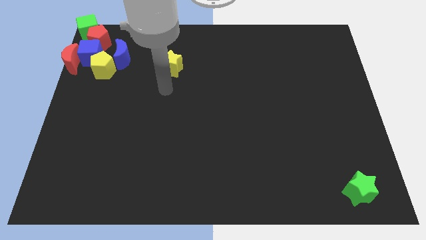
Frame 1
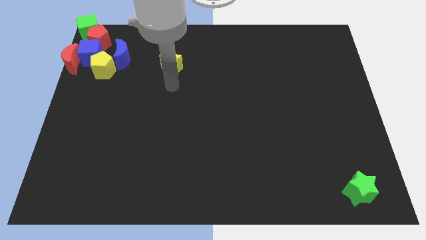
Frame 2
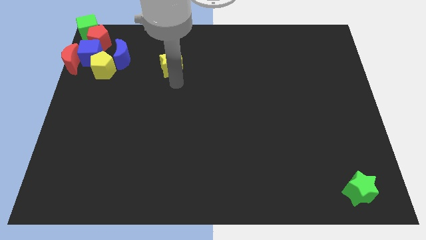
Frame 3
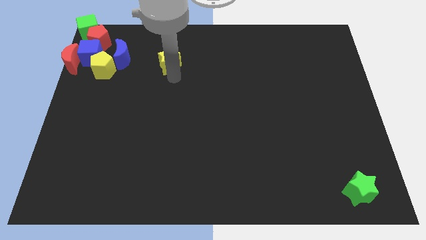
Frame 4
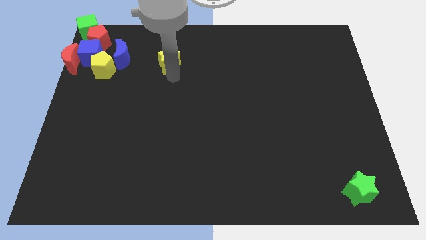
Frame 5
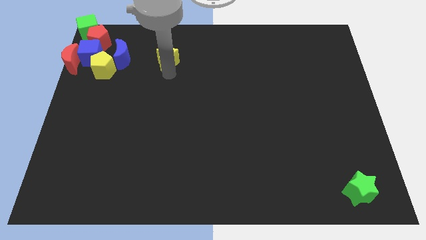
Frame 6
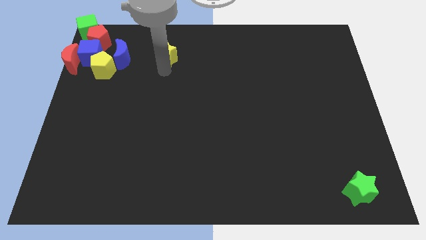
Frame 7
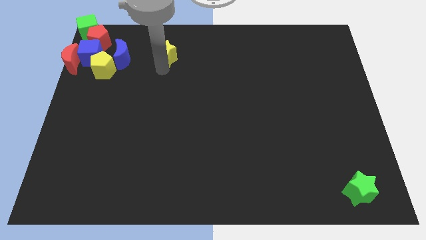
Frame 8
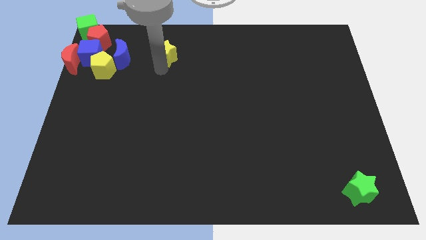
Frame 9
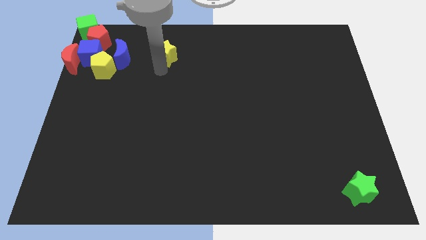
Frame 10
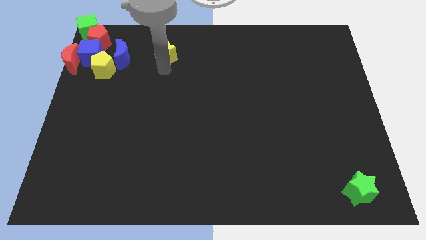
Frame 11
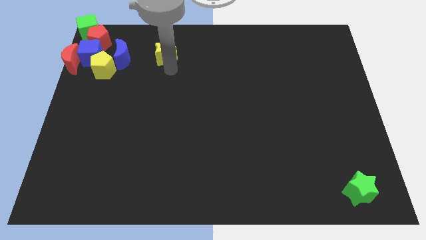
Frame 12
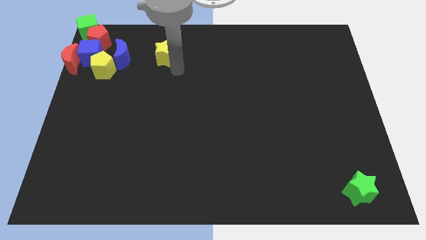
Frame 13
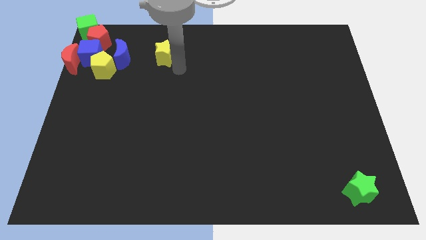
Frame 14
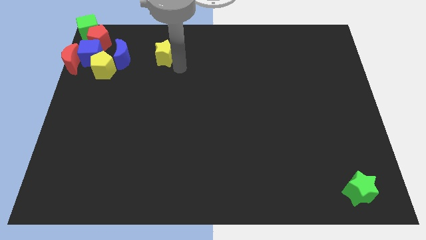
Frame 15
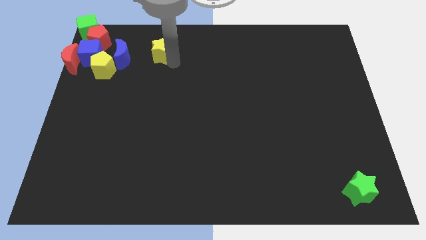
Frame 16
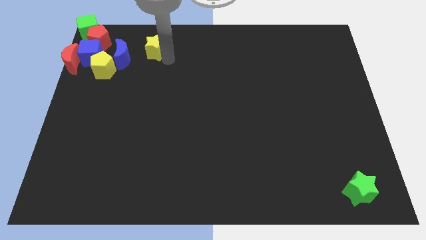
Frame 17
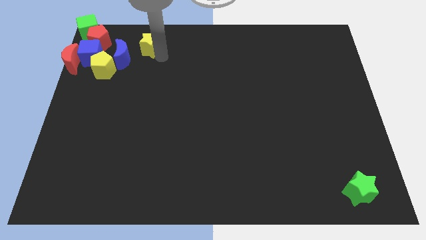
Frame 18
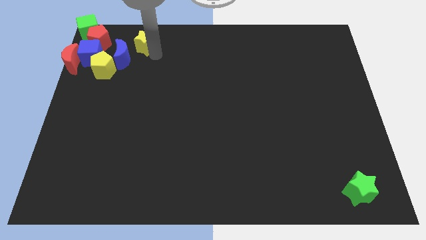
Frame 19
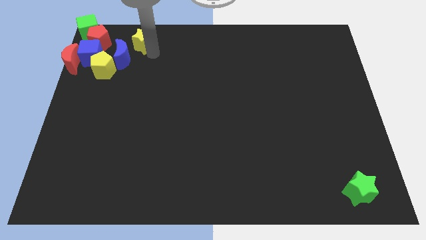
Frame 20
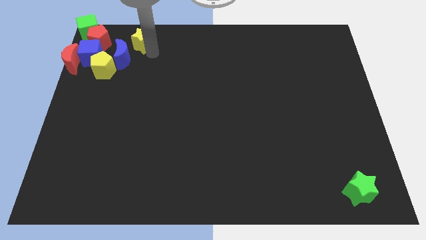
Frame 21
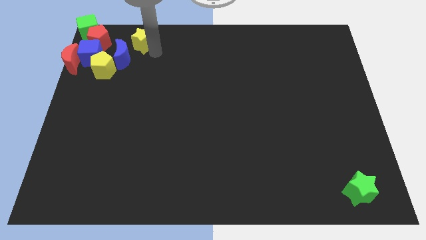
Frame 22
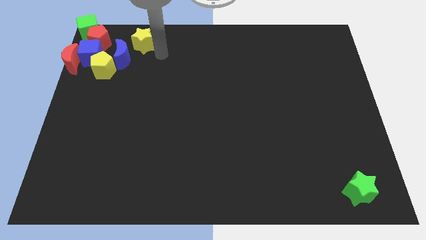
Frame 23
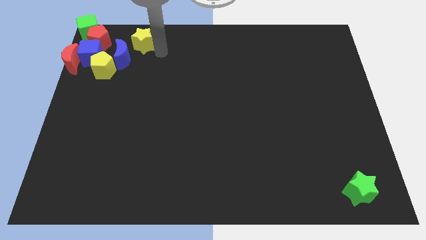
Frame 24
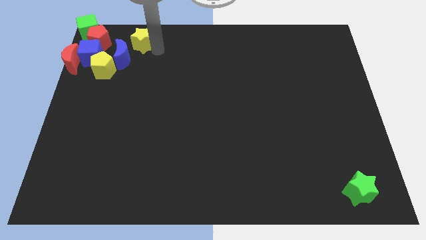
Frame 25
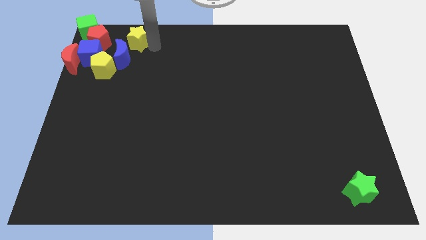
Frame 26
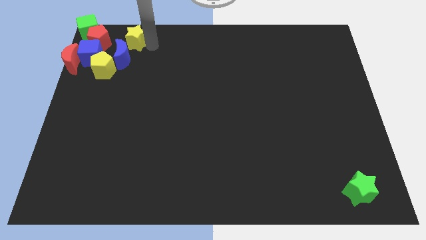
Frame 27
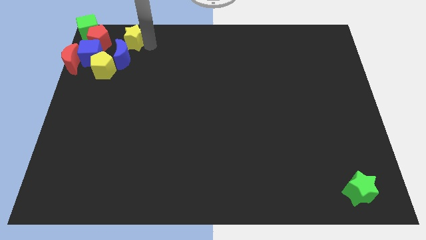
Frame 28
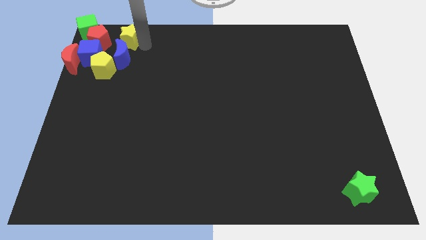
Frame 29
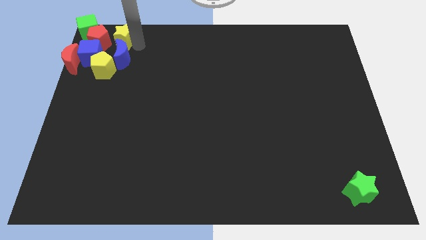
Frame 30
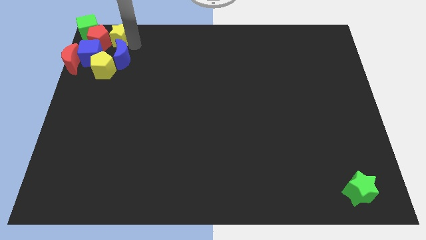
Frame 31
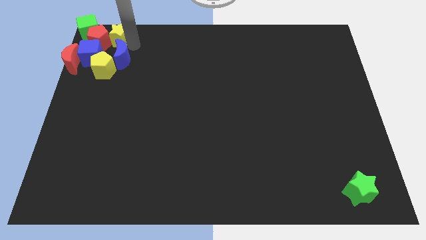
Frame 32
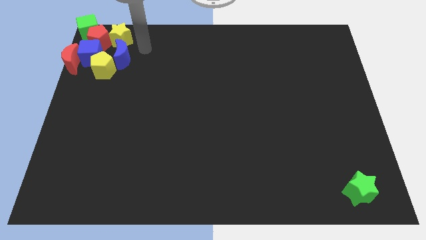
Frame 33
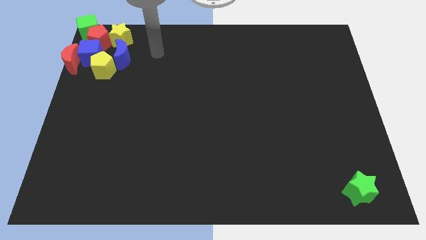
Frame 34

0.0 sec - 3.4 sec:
move the yellow star to the right of the red pentagon

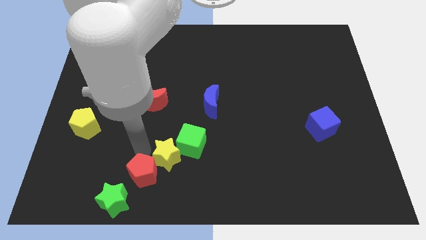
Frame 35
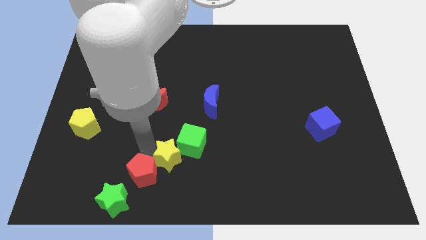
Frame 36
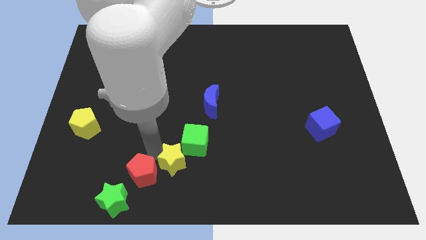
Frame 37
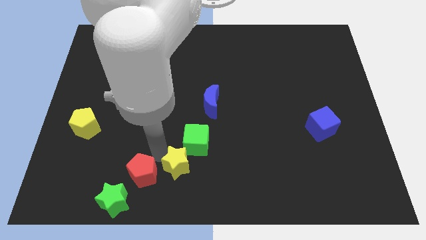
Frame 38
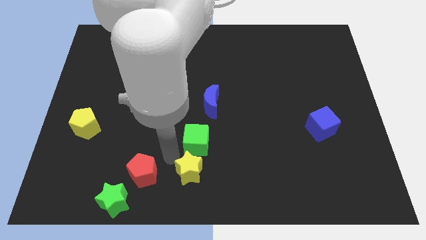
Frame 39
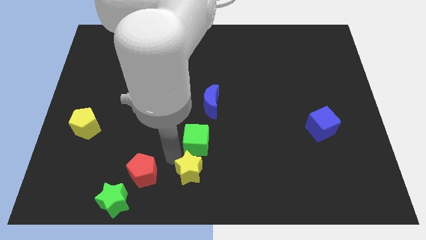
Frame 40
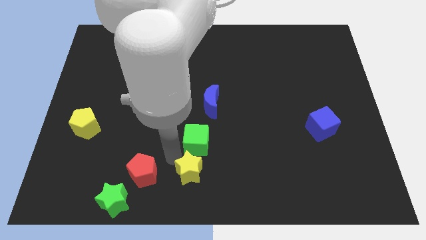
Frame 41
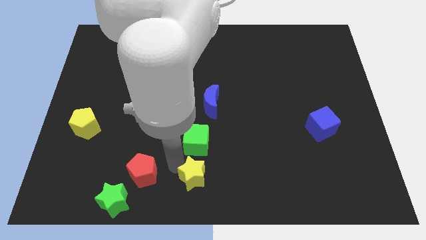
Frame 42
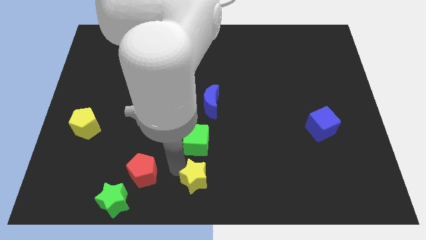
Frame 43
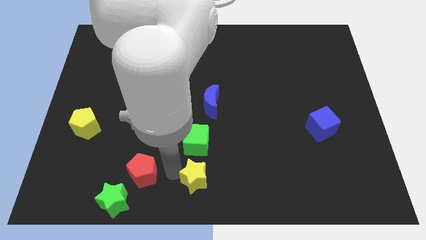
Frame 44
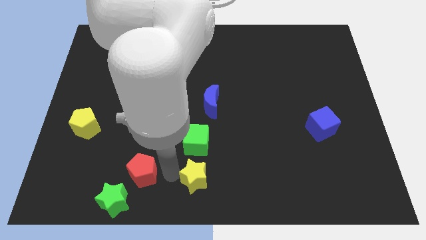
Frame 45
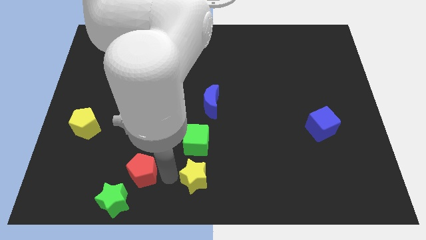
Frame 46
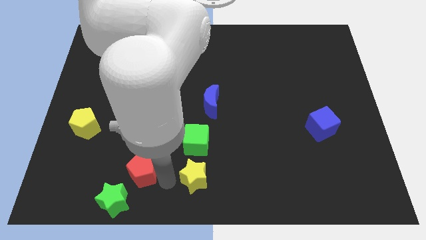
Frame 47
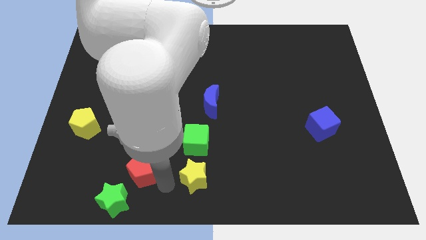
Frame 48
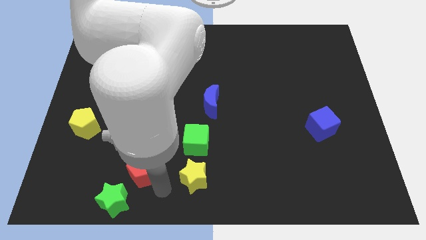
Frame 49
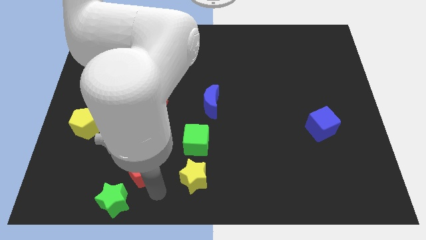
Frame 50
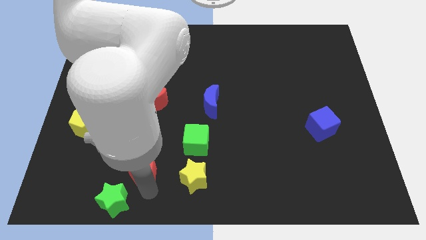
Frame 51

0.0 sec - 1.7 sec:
separate the yellow star from the green cube

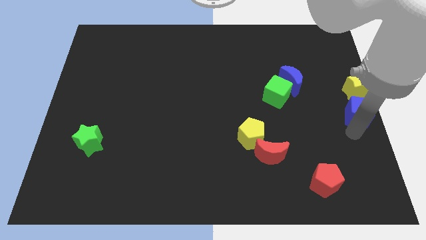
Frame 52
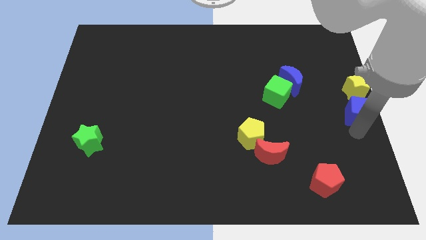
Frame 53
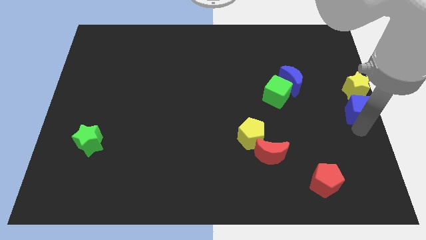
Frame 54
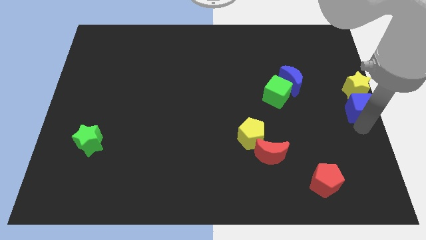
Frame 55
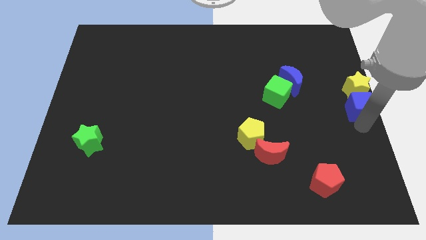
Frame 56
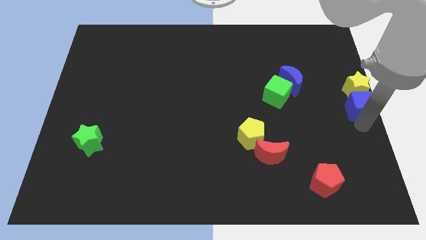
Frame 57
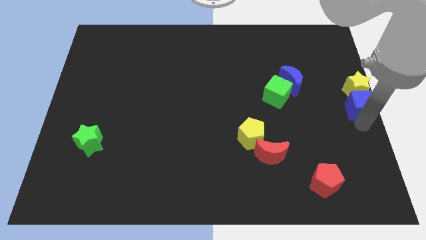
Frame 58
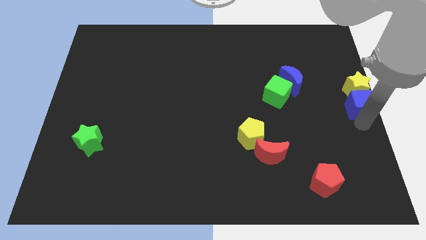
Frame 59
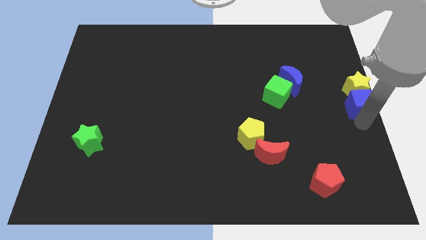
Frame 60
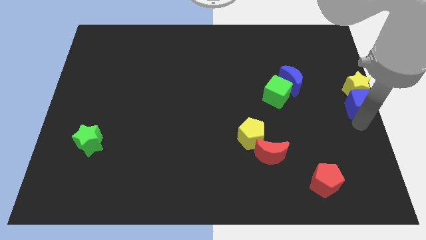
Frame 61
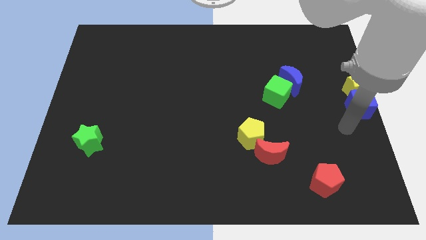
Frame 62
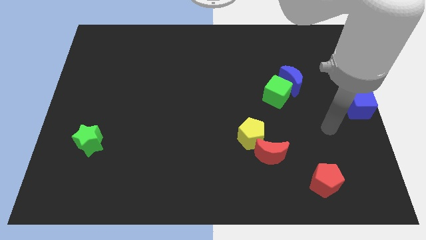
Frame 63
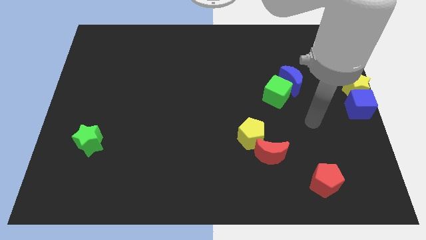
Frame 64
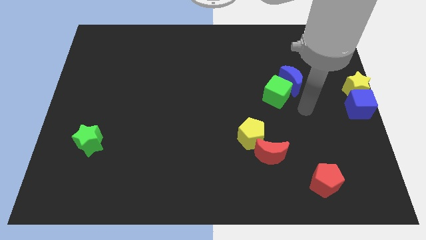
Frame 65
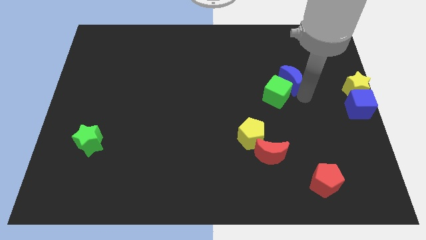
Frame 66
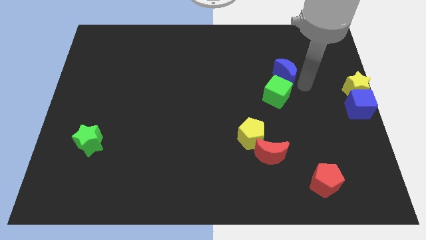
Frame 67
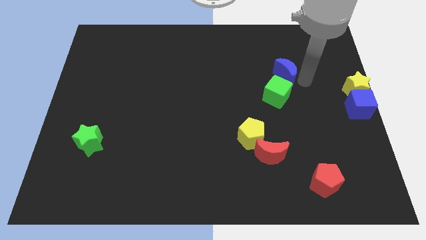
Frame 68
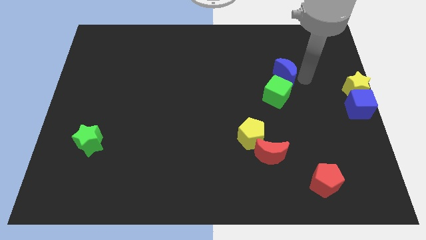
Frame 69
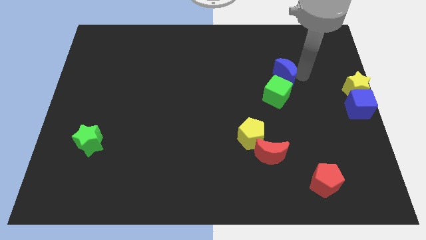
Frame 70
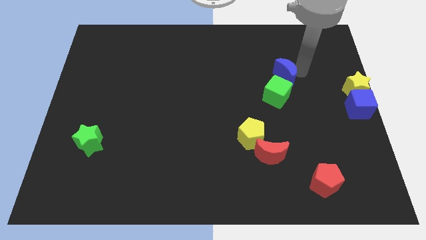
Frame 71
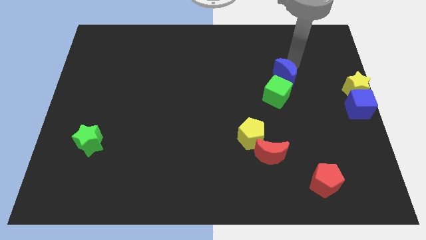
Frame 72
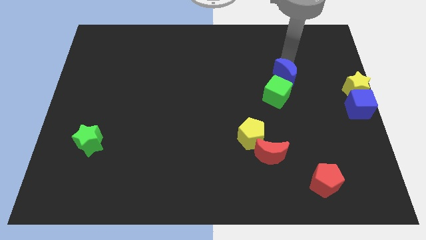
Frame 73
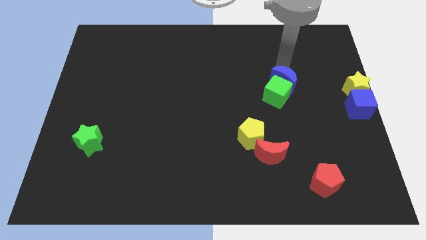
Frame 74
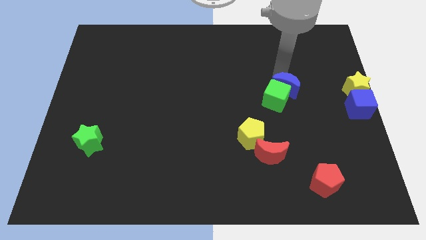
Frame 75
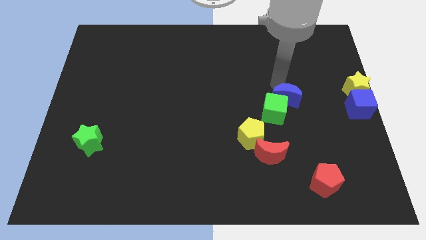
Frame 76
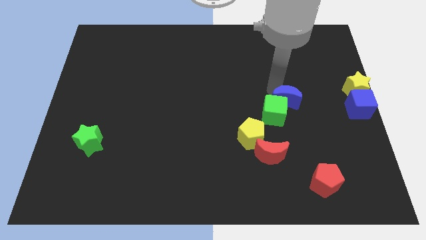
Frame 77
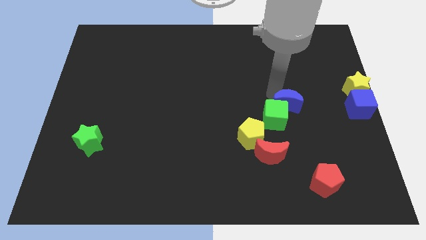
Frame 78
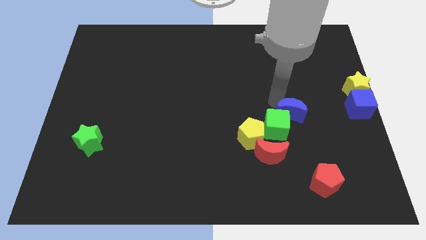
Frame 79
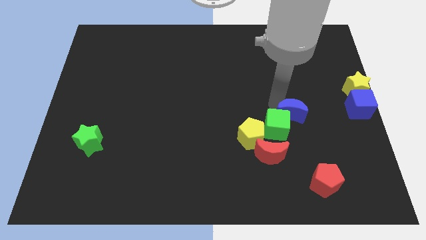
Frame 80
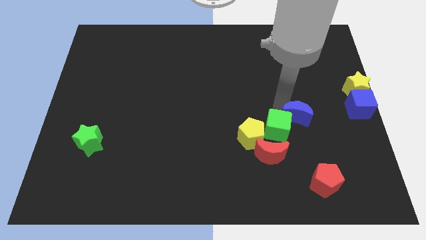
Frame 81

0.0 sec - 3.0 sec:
place green cube above the red moon

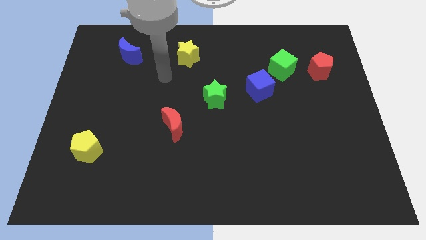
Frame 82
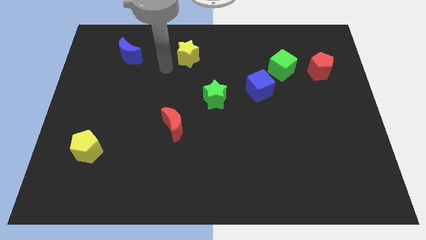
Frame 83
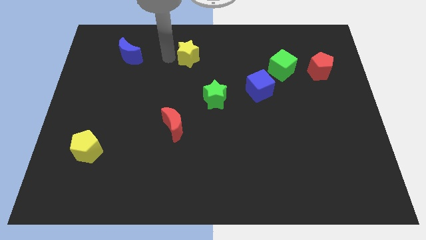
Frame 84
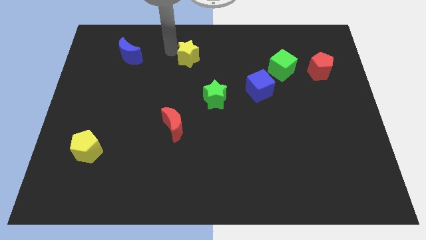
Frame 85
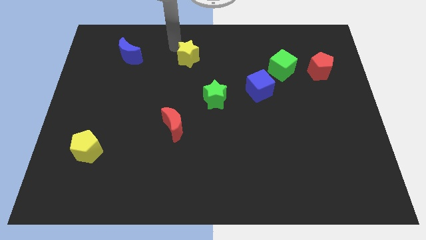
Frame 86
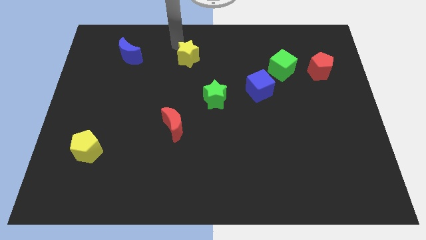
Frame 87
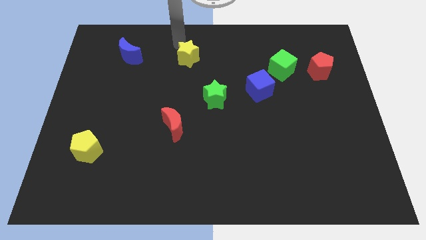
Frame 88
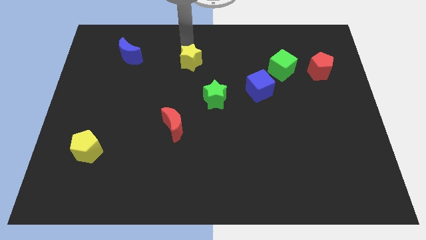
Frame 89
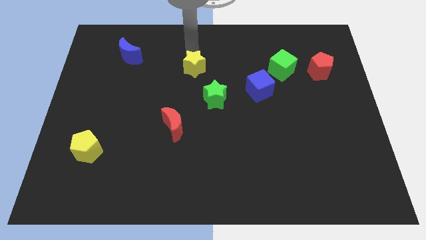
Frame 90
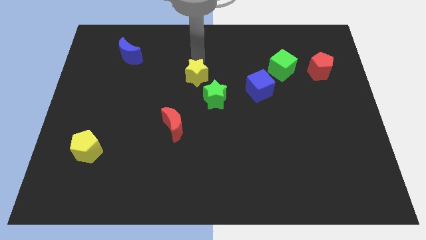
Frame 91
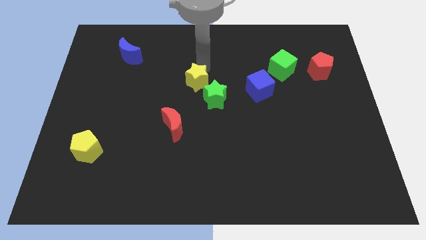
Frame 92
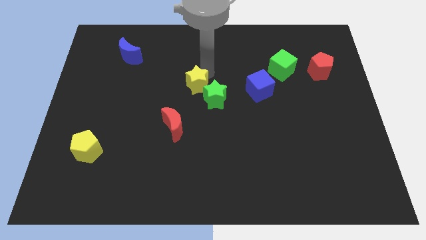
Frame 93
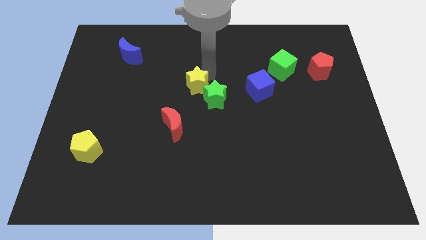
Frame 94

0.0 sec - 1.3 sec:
slightly move the yellow star towards down
